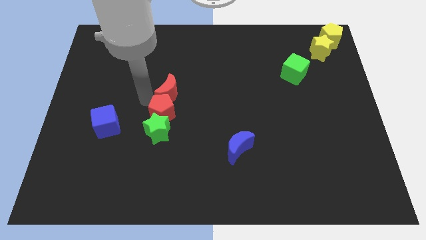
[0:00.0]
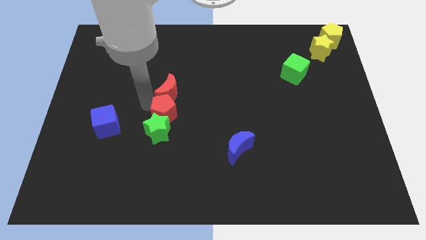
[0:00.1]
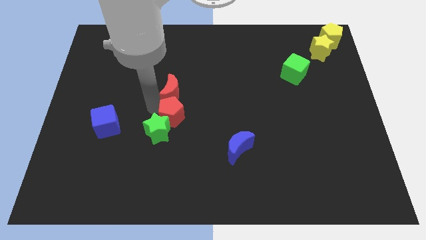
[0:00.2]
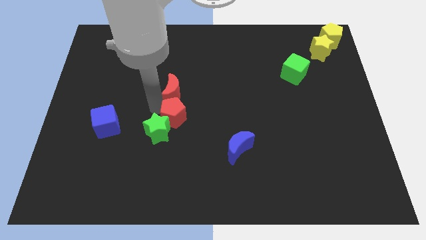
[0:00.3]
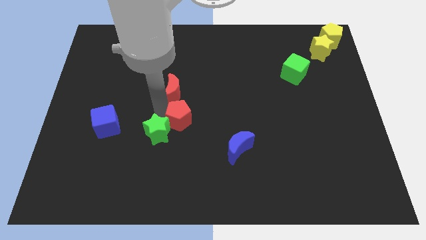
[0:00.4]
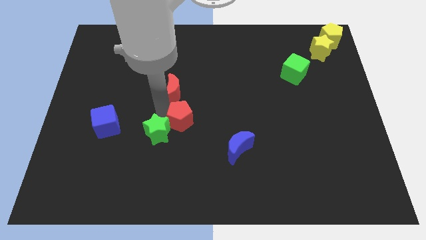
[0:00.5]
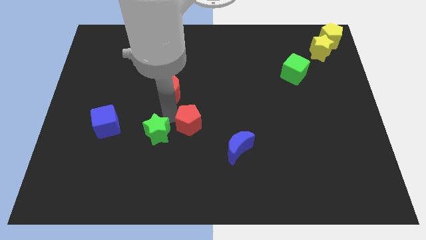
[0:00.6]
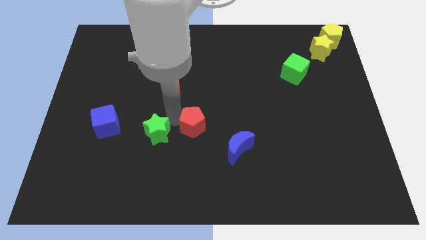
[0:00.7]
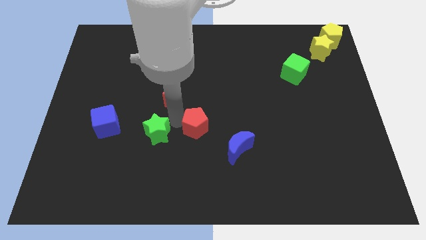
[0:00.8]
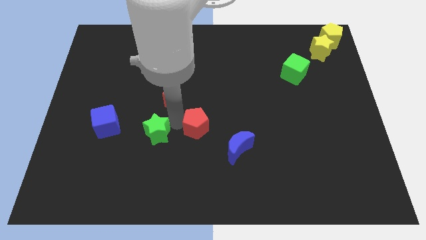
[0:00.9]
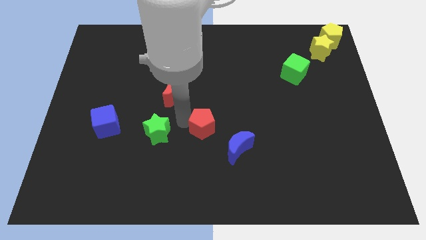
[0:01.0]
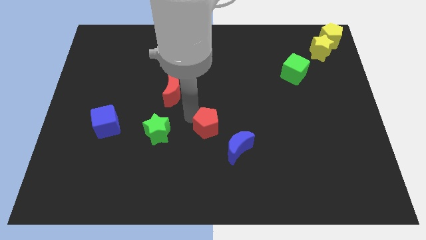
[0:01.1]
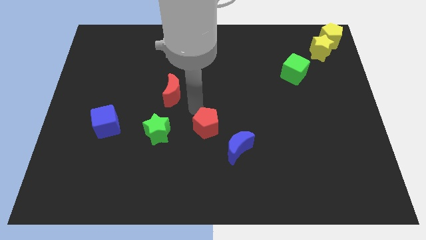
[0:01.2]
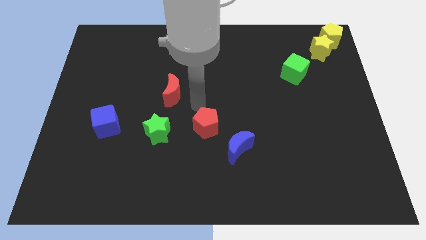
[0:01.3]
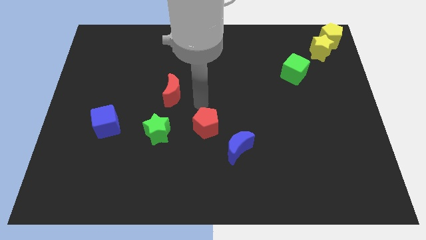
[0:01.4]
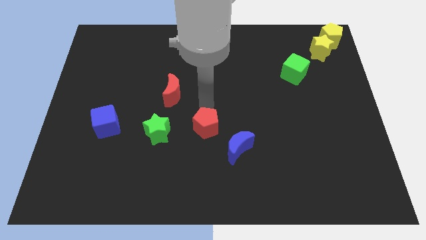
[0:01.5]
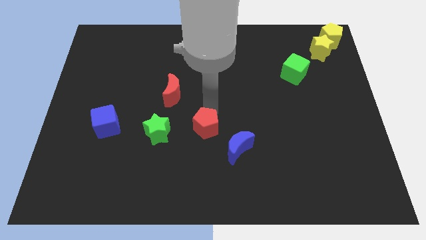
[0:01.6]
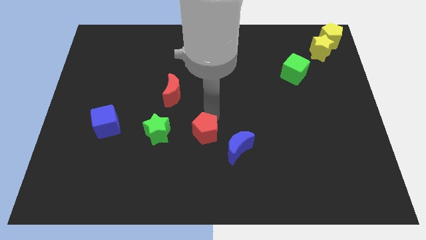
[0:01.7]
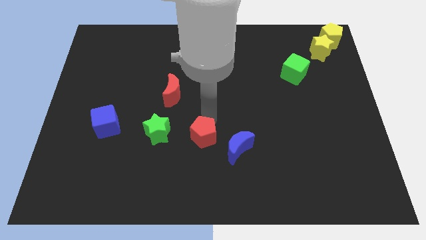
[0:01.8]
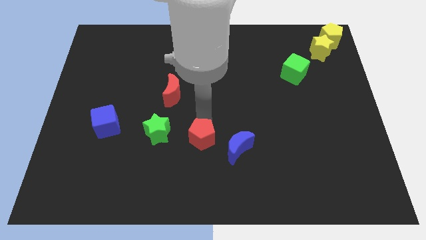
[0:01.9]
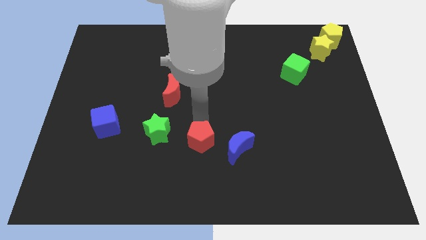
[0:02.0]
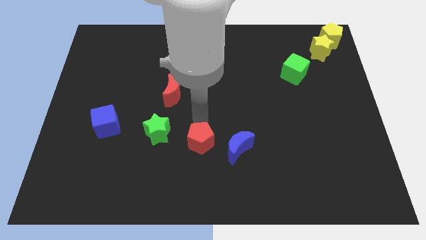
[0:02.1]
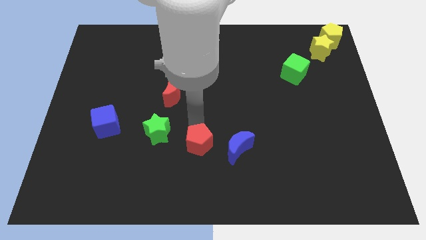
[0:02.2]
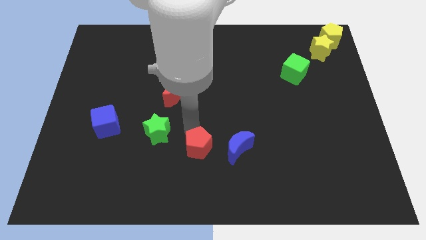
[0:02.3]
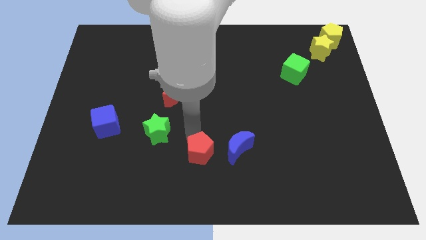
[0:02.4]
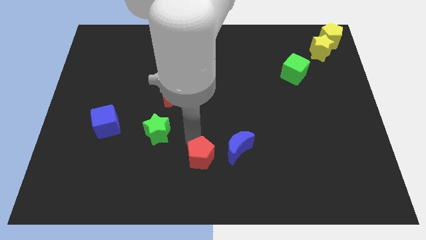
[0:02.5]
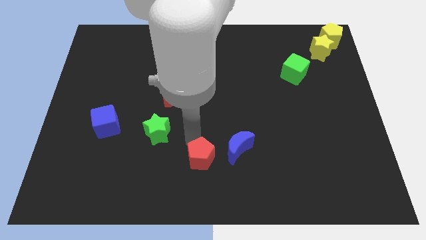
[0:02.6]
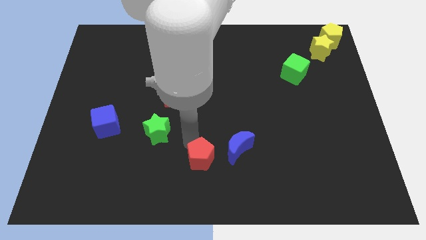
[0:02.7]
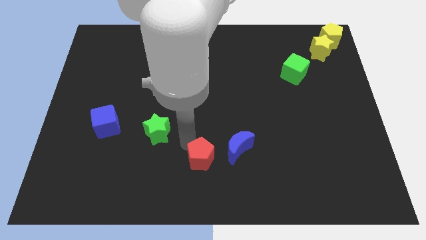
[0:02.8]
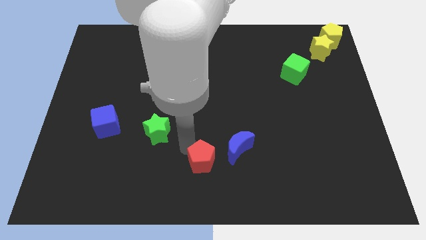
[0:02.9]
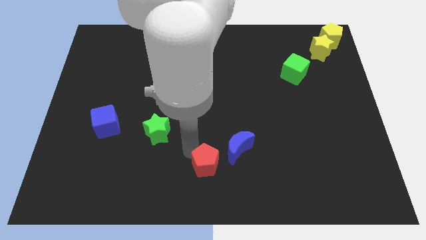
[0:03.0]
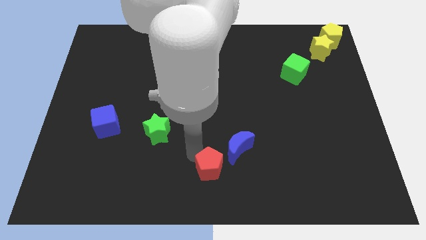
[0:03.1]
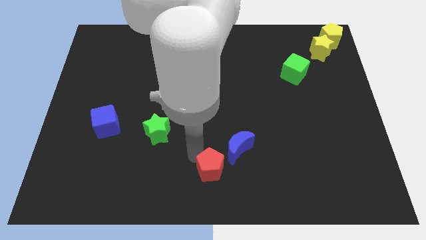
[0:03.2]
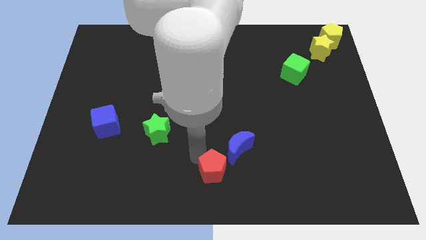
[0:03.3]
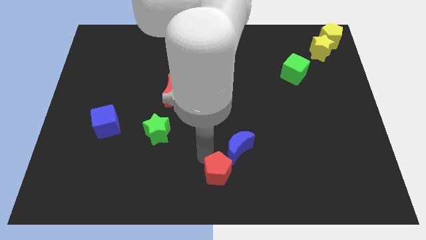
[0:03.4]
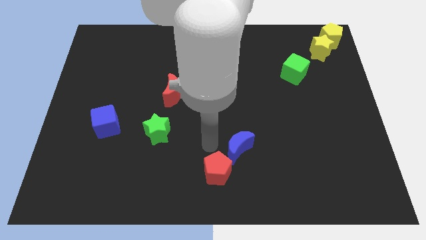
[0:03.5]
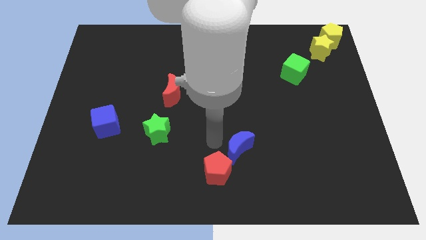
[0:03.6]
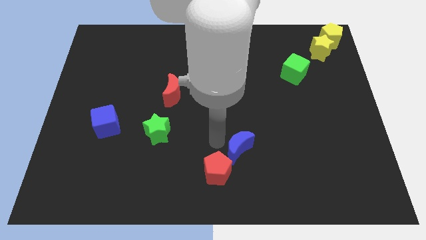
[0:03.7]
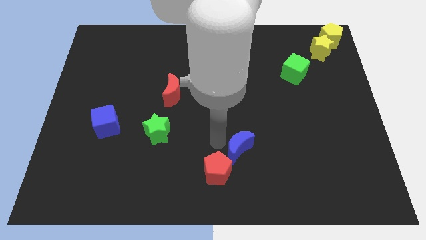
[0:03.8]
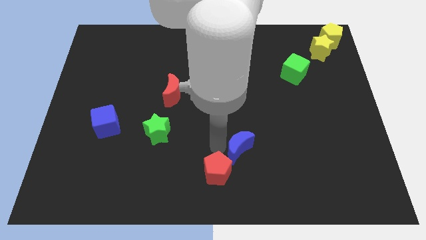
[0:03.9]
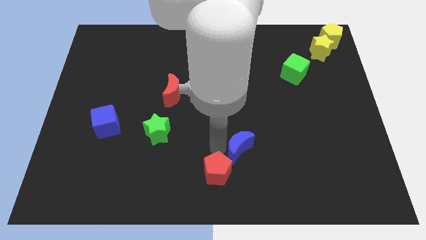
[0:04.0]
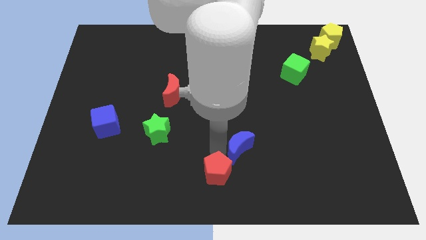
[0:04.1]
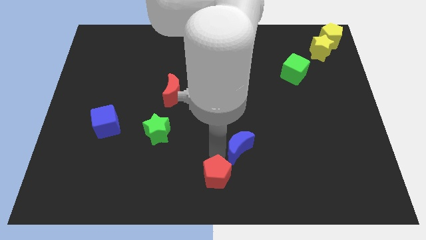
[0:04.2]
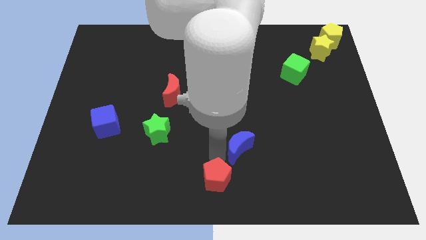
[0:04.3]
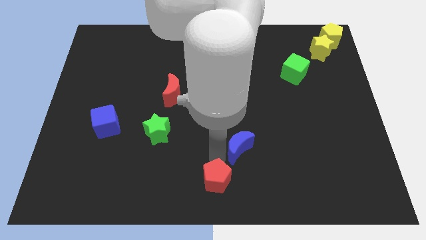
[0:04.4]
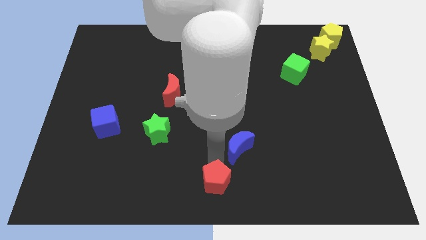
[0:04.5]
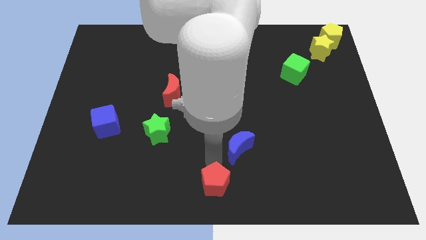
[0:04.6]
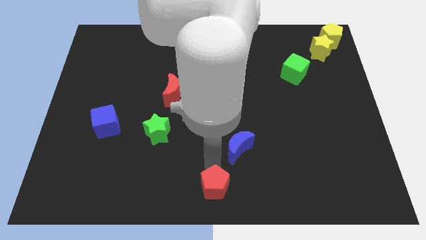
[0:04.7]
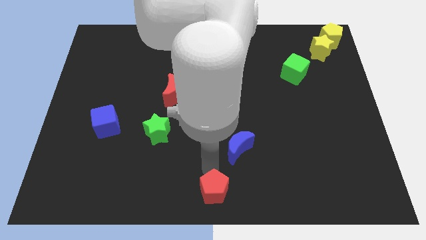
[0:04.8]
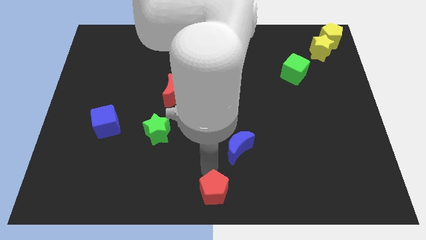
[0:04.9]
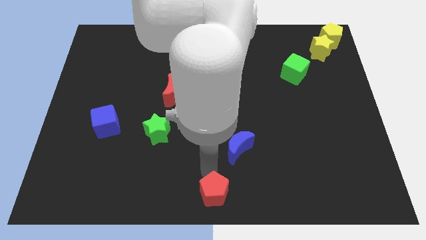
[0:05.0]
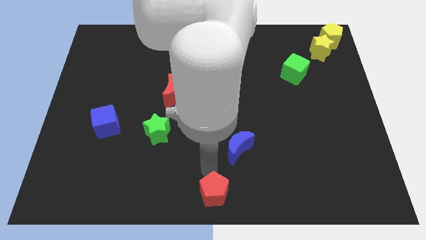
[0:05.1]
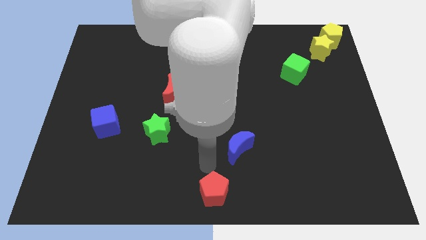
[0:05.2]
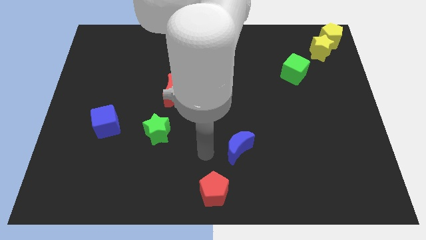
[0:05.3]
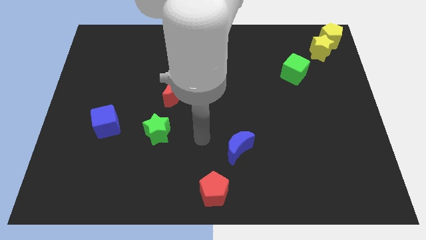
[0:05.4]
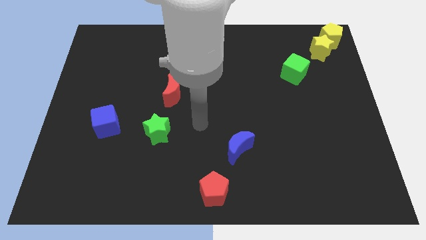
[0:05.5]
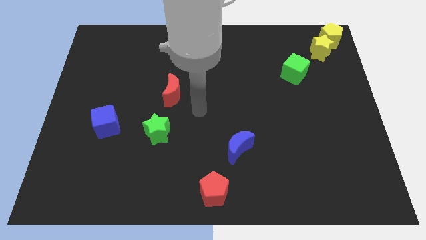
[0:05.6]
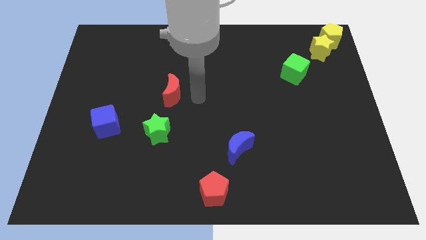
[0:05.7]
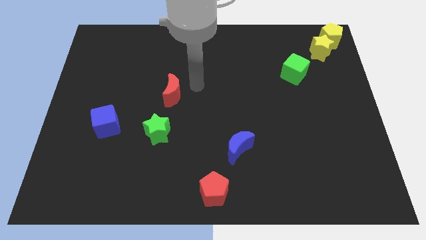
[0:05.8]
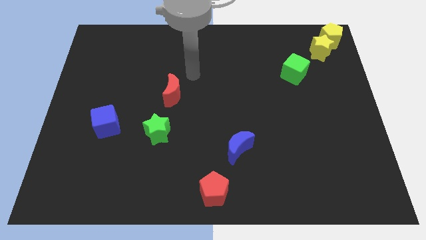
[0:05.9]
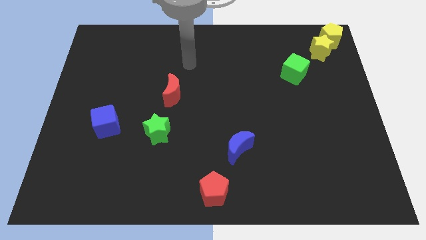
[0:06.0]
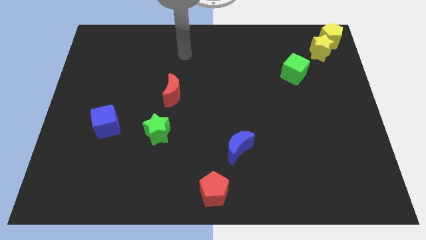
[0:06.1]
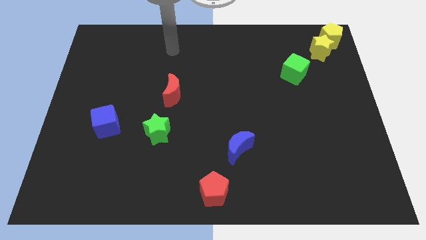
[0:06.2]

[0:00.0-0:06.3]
move the red pentagon to the bottom center

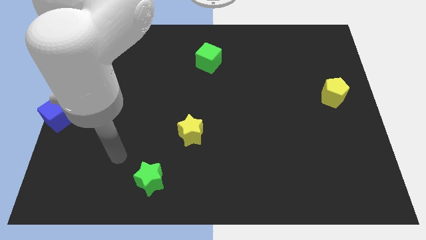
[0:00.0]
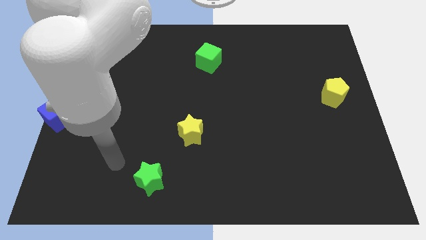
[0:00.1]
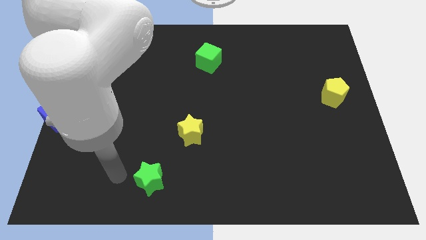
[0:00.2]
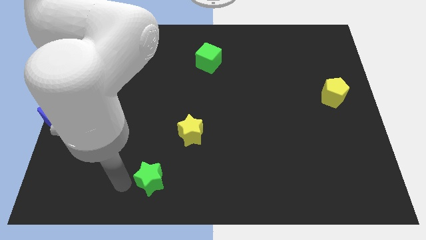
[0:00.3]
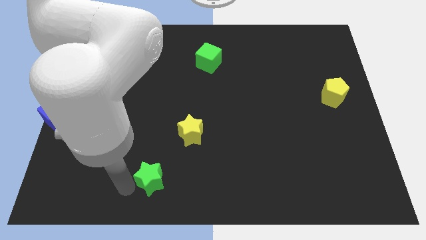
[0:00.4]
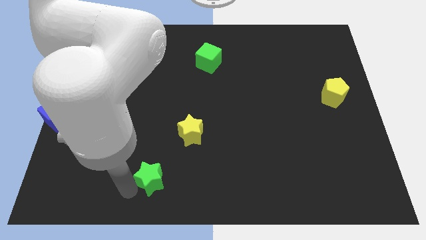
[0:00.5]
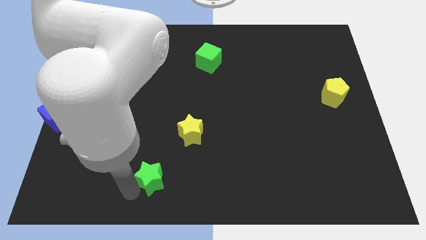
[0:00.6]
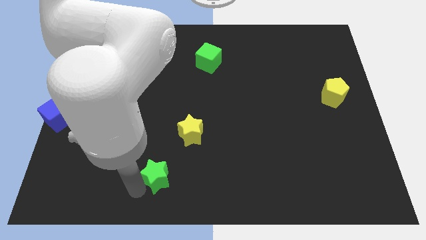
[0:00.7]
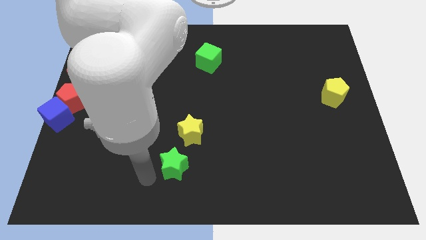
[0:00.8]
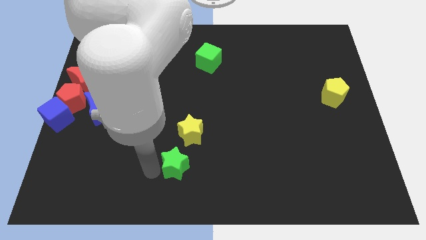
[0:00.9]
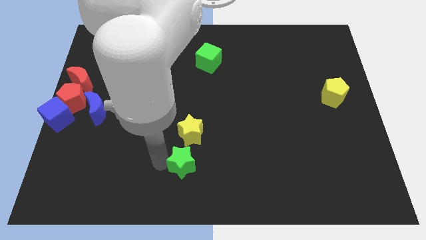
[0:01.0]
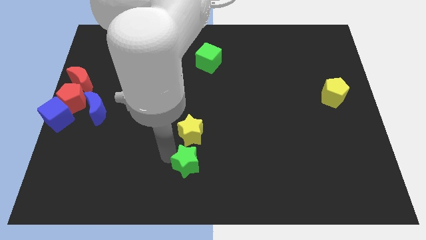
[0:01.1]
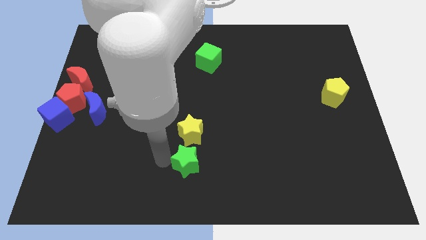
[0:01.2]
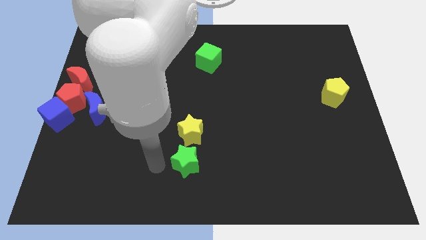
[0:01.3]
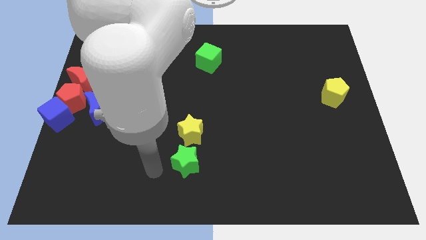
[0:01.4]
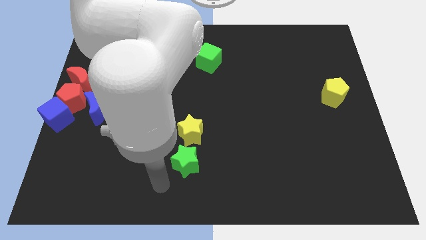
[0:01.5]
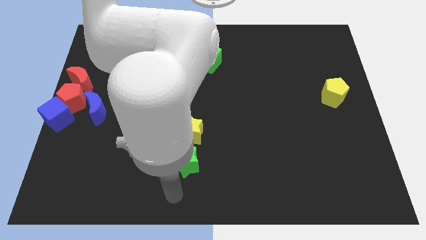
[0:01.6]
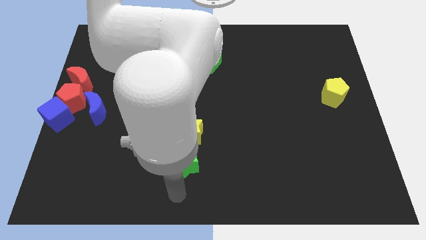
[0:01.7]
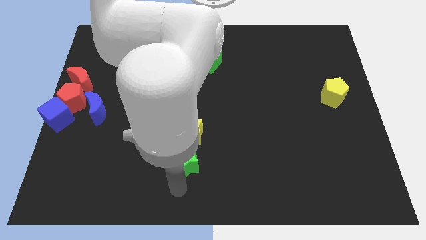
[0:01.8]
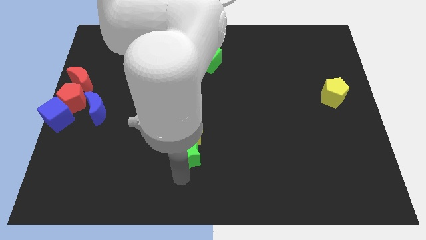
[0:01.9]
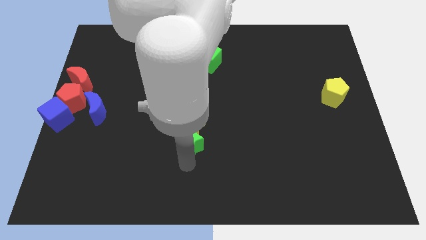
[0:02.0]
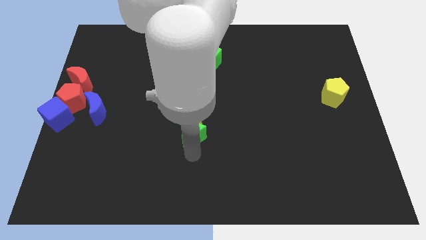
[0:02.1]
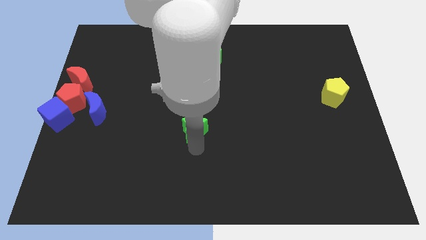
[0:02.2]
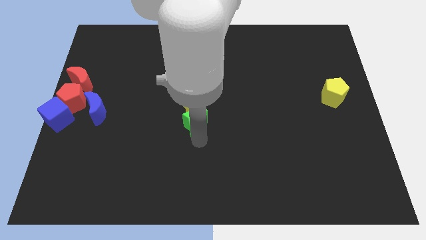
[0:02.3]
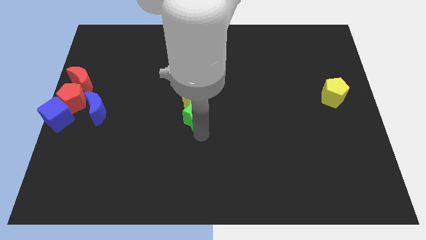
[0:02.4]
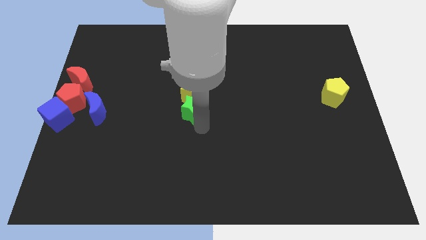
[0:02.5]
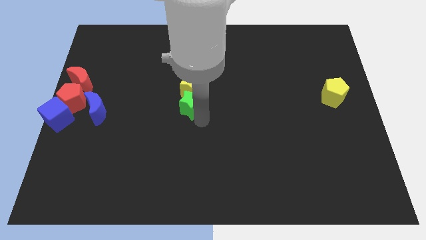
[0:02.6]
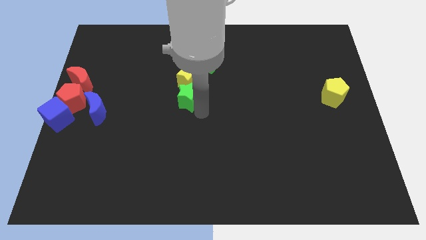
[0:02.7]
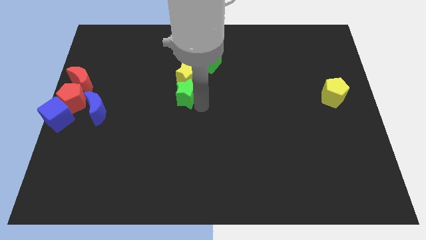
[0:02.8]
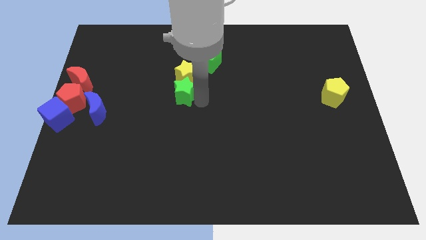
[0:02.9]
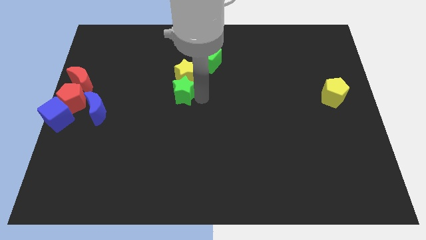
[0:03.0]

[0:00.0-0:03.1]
move green and yellow stars towards green cube
